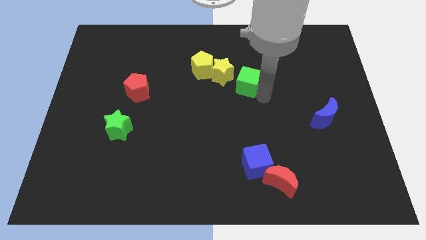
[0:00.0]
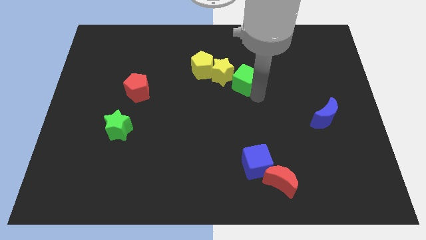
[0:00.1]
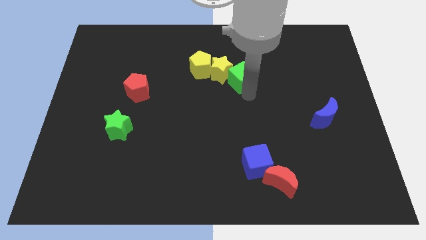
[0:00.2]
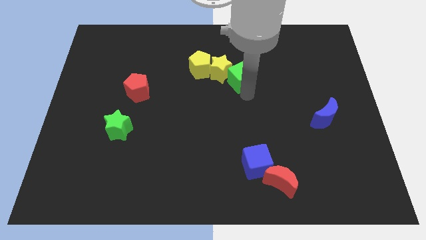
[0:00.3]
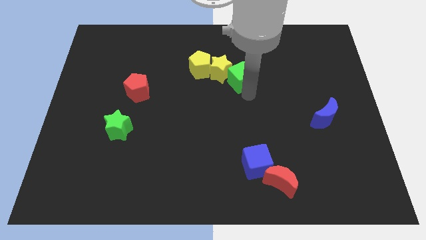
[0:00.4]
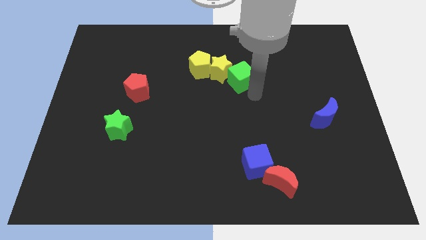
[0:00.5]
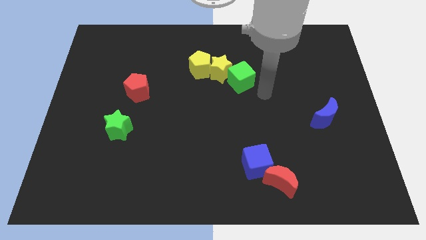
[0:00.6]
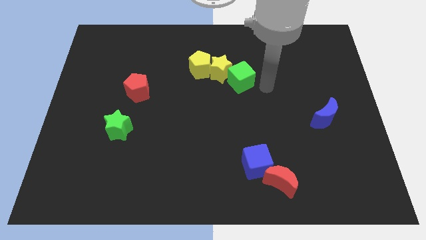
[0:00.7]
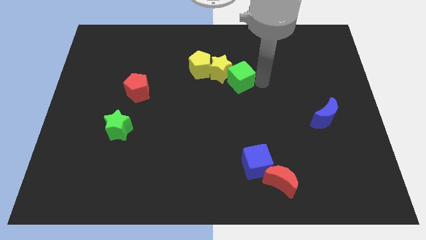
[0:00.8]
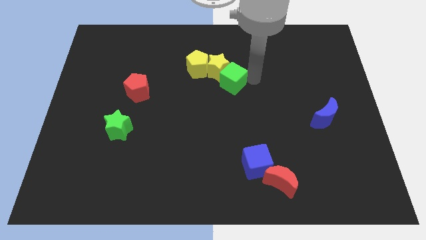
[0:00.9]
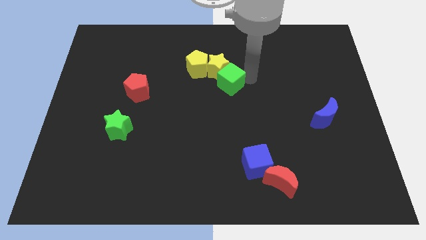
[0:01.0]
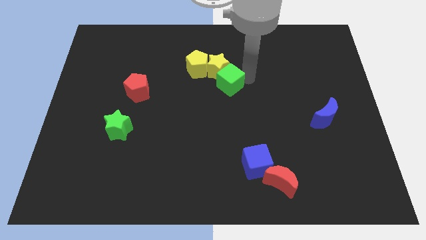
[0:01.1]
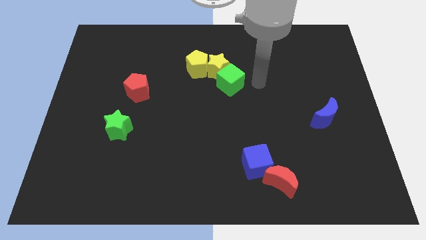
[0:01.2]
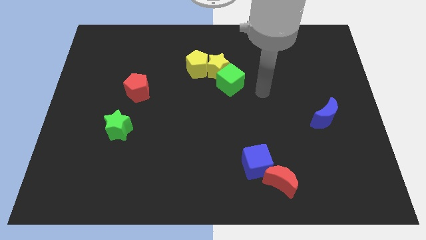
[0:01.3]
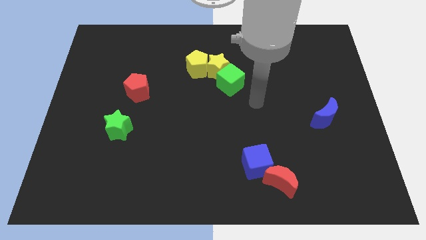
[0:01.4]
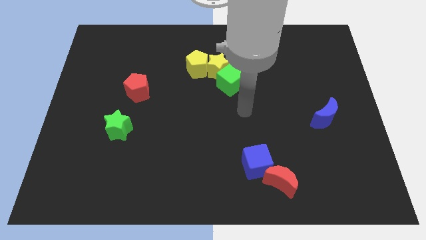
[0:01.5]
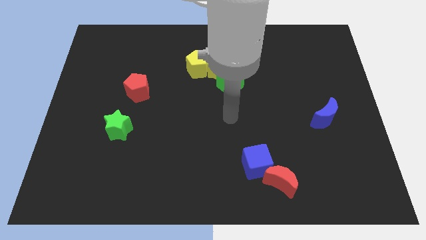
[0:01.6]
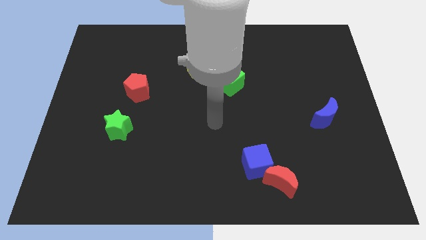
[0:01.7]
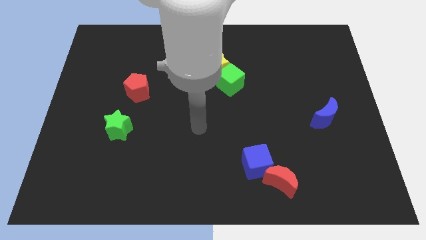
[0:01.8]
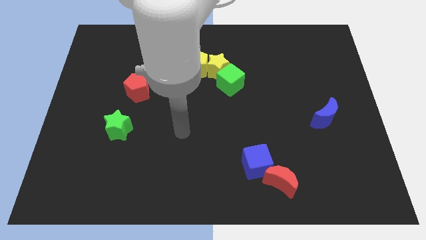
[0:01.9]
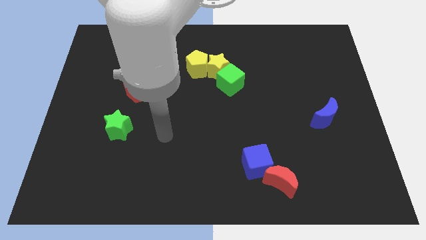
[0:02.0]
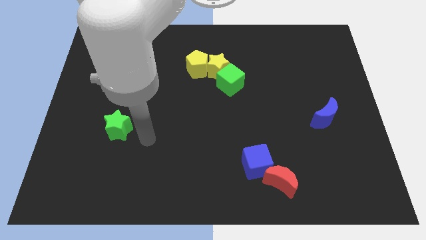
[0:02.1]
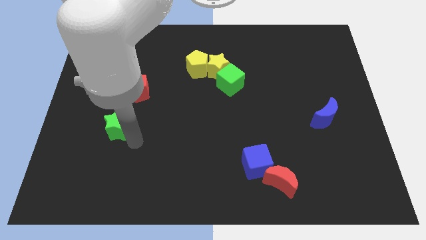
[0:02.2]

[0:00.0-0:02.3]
slightly push the green cube into the yellow star

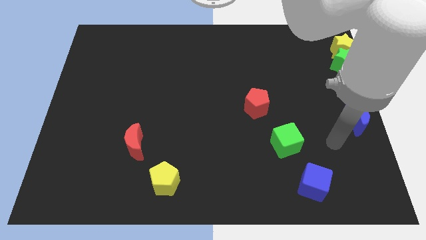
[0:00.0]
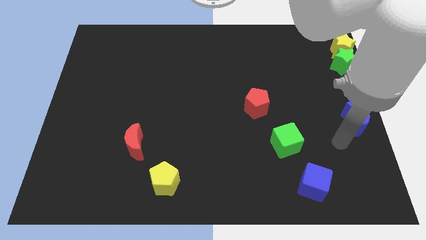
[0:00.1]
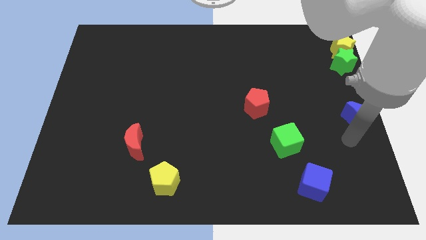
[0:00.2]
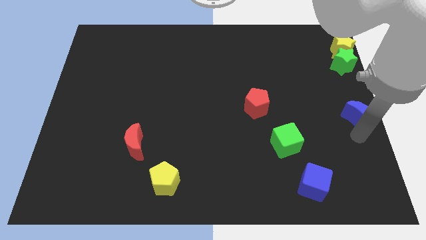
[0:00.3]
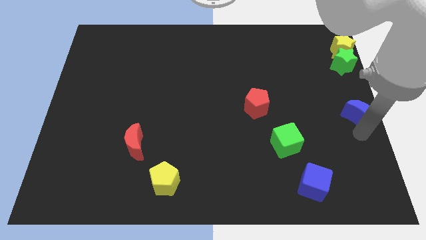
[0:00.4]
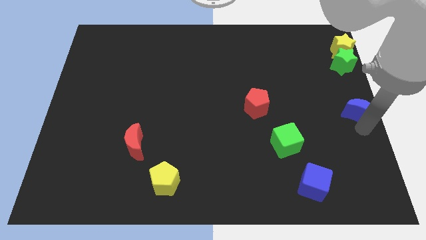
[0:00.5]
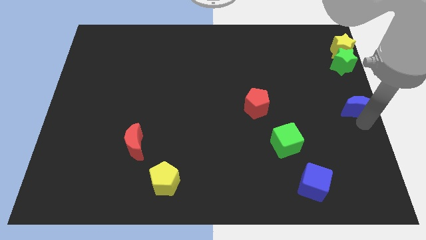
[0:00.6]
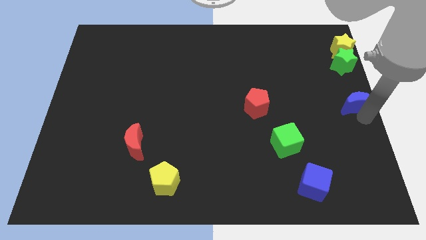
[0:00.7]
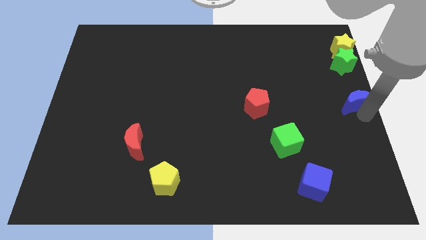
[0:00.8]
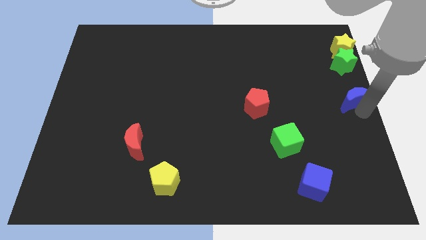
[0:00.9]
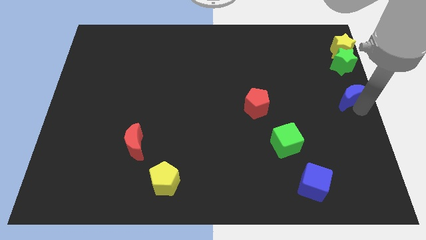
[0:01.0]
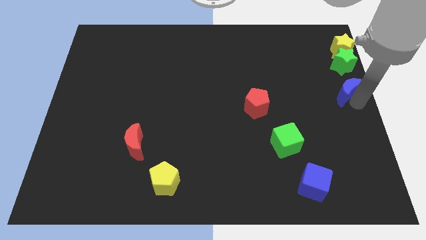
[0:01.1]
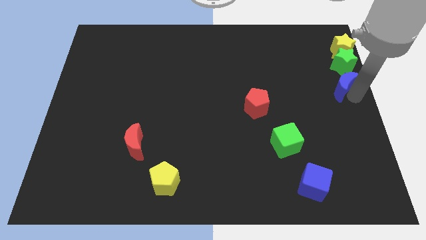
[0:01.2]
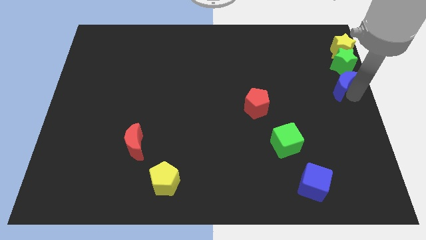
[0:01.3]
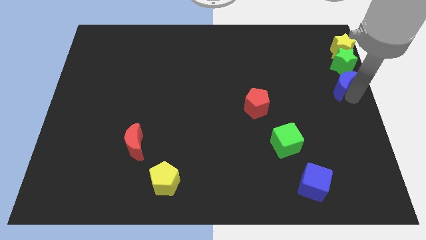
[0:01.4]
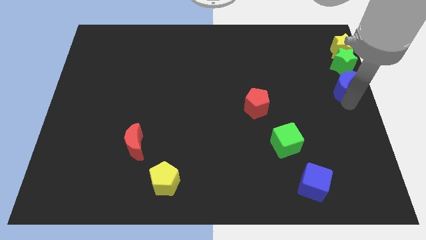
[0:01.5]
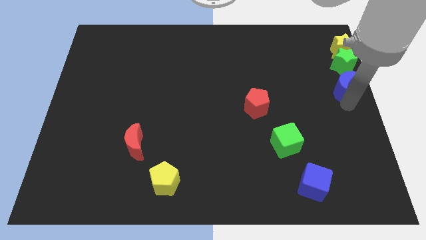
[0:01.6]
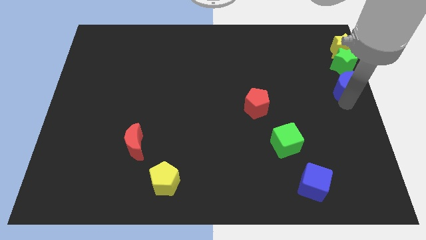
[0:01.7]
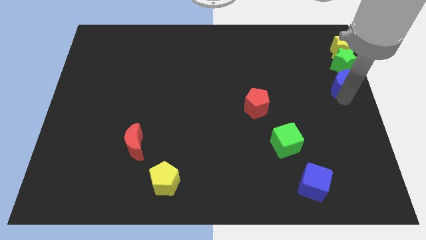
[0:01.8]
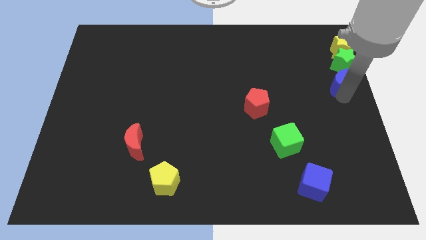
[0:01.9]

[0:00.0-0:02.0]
place the blue crescent below the green star

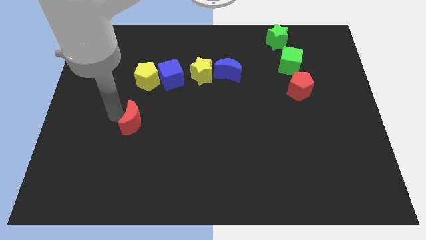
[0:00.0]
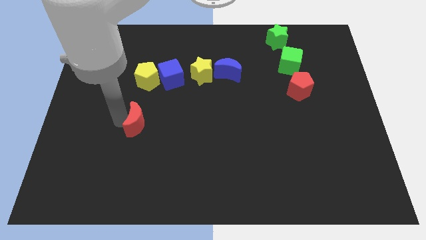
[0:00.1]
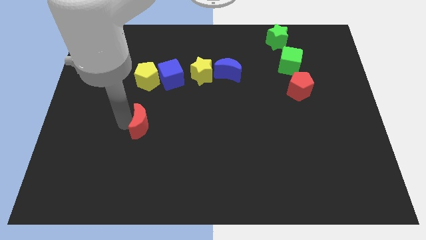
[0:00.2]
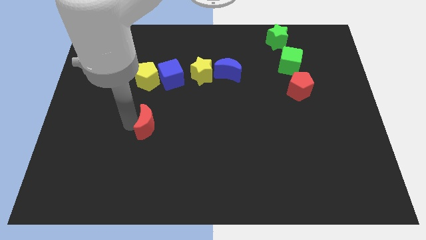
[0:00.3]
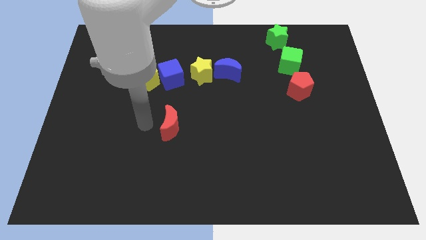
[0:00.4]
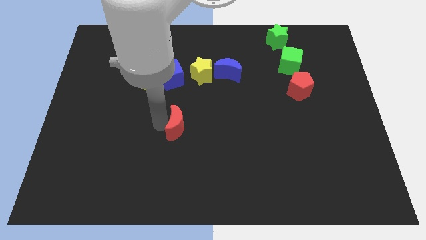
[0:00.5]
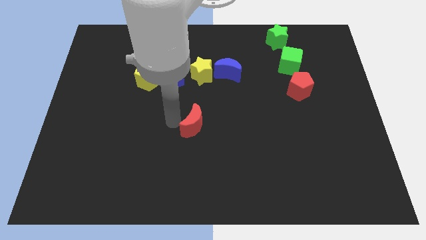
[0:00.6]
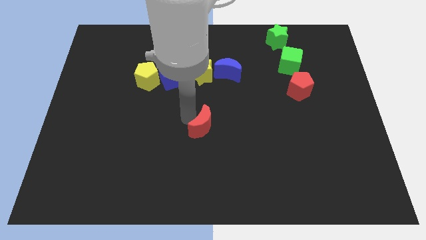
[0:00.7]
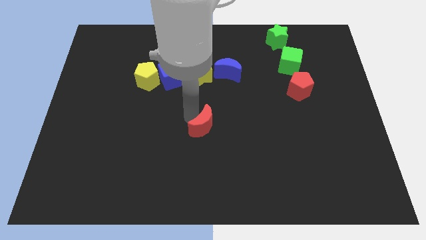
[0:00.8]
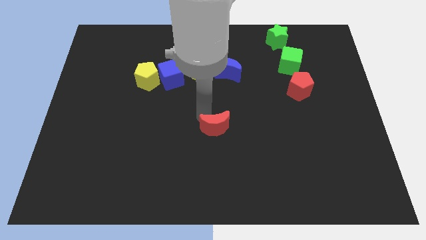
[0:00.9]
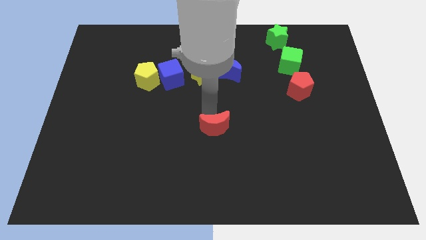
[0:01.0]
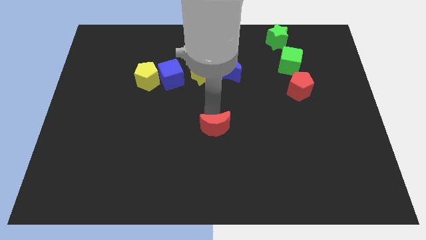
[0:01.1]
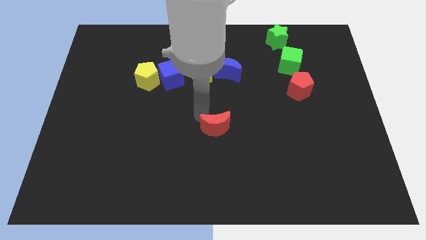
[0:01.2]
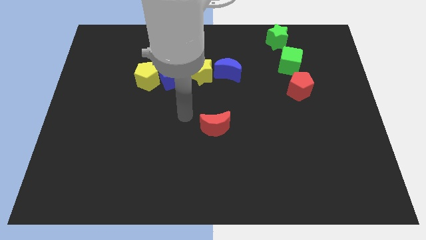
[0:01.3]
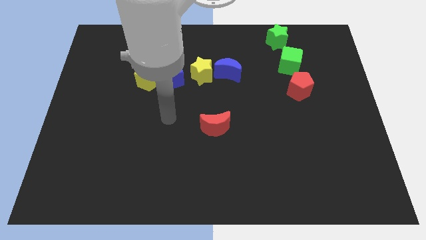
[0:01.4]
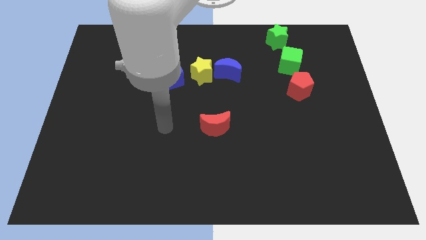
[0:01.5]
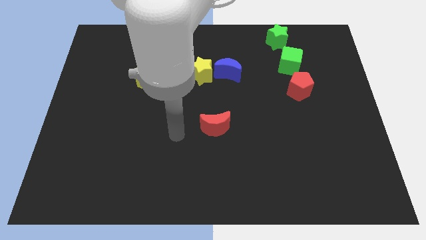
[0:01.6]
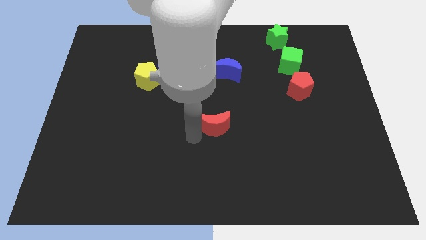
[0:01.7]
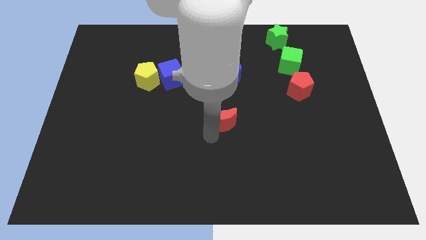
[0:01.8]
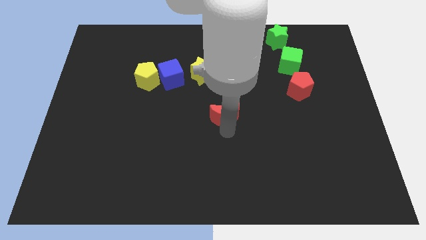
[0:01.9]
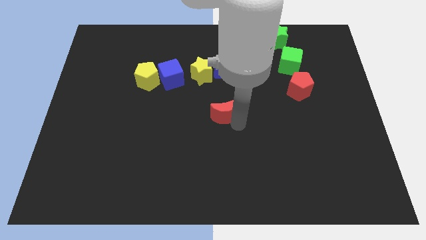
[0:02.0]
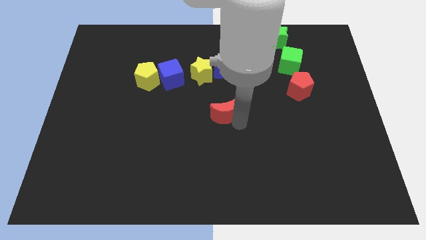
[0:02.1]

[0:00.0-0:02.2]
move the red moon at center of the board

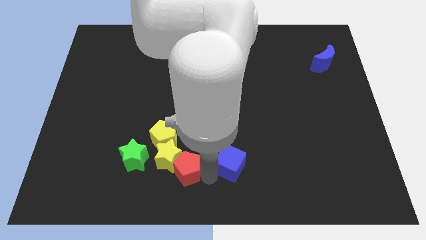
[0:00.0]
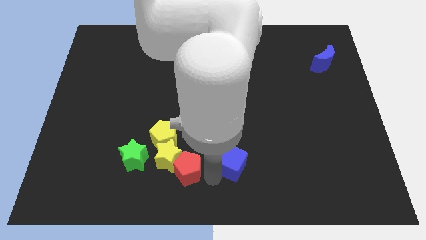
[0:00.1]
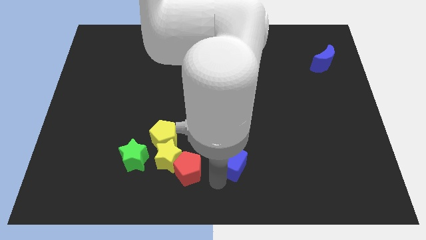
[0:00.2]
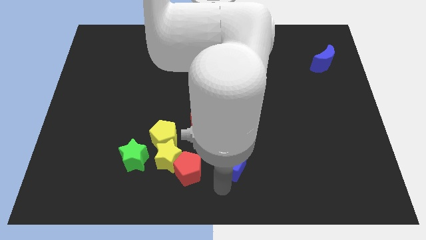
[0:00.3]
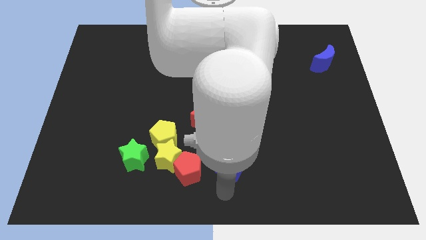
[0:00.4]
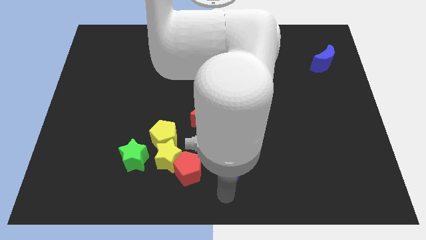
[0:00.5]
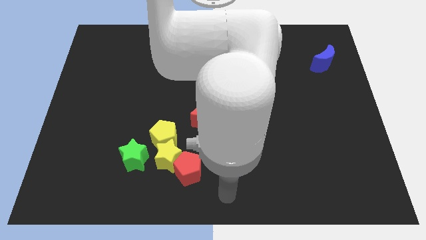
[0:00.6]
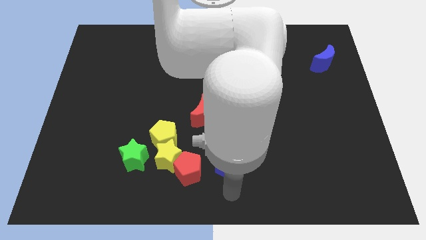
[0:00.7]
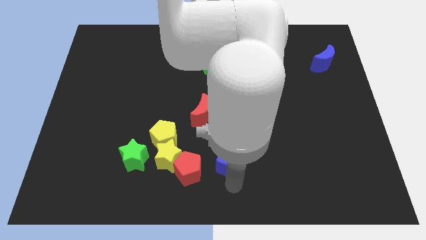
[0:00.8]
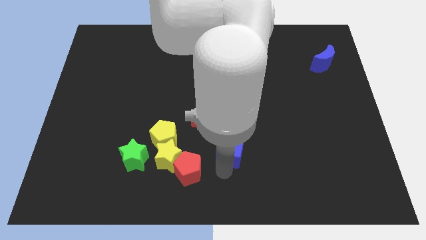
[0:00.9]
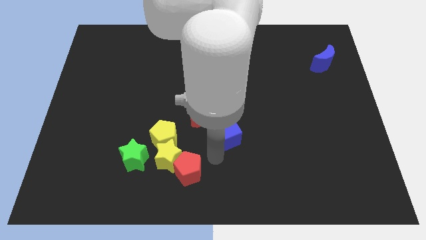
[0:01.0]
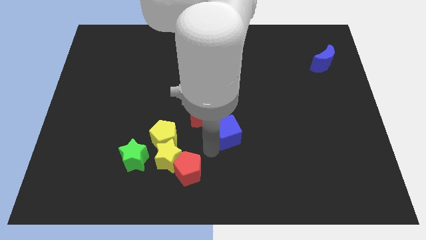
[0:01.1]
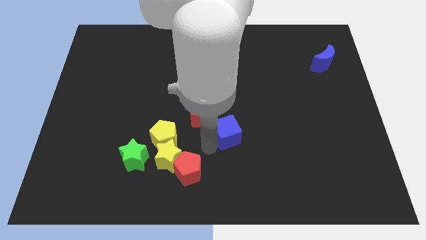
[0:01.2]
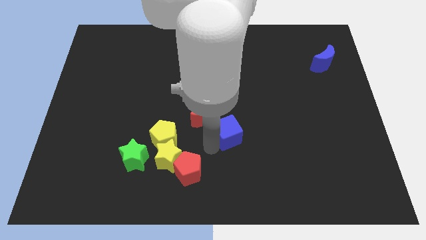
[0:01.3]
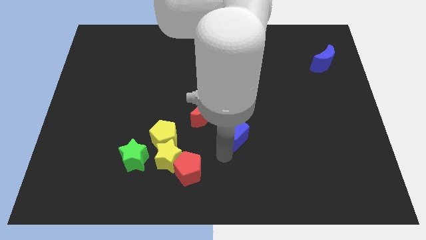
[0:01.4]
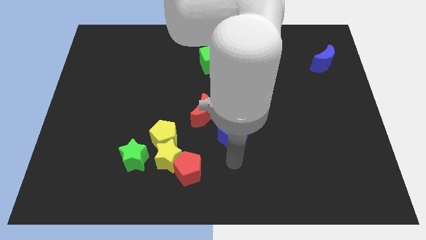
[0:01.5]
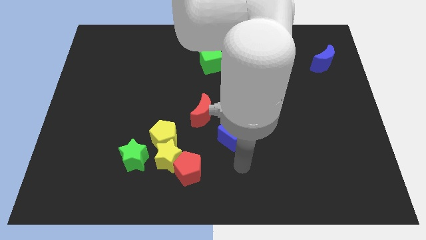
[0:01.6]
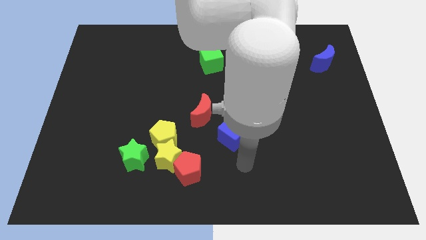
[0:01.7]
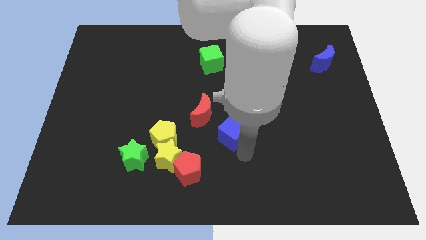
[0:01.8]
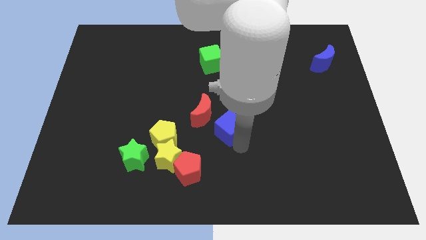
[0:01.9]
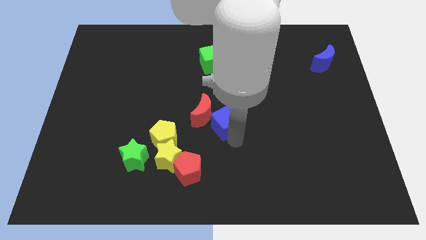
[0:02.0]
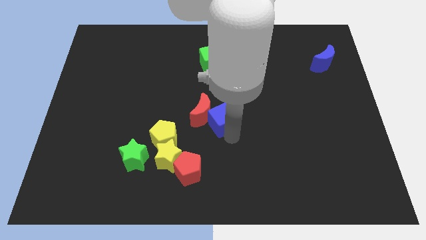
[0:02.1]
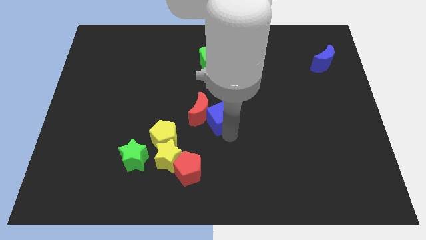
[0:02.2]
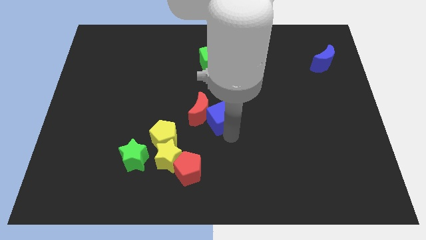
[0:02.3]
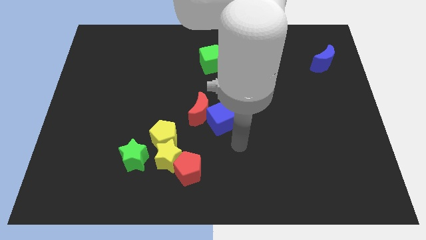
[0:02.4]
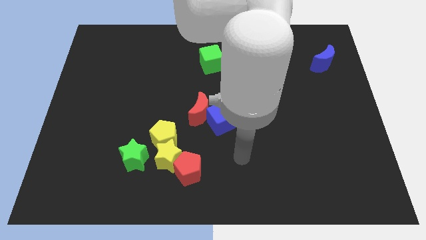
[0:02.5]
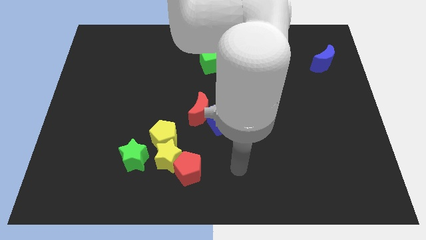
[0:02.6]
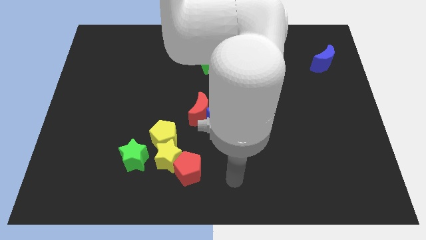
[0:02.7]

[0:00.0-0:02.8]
place blue cube close to the red moon
